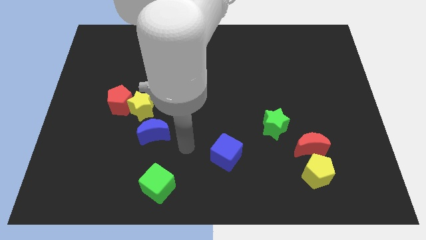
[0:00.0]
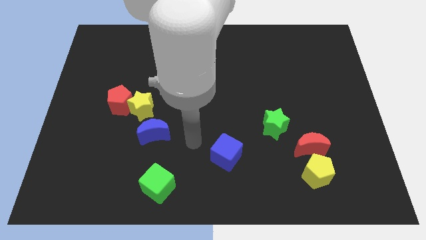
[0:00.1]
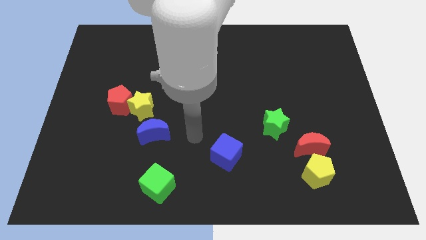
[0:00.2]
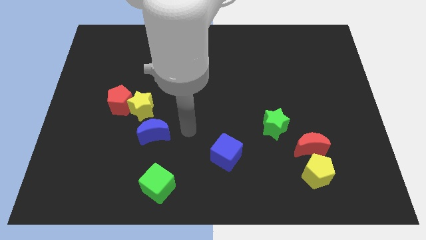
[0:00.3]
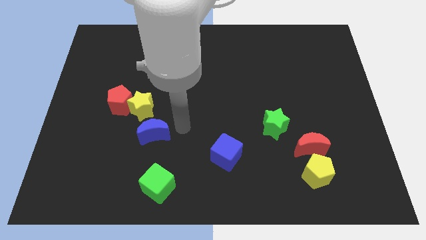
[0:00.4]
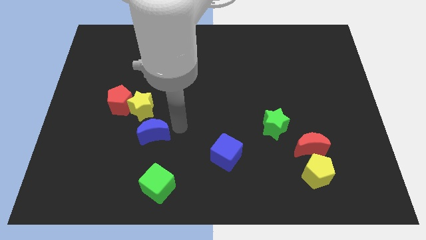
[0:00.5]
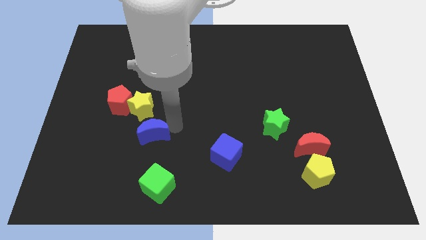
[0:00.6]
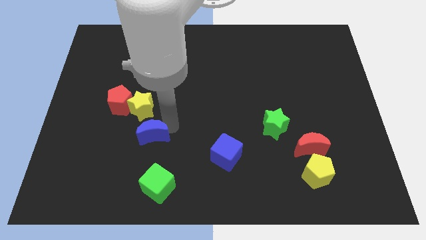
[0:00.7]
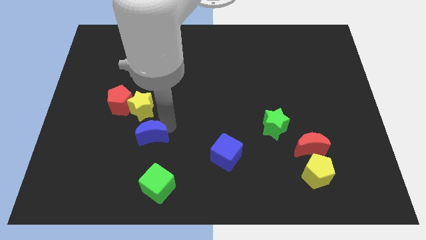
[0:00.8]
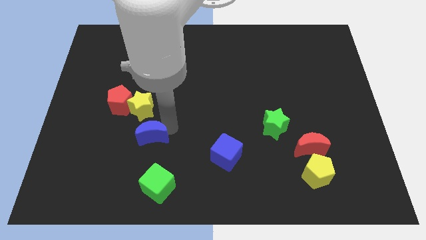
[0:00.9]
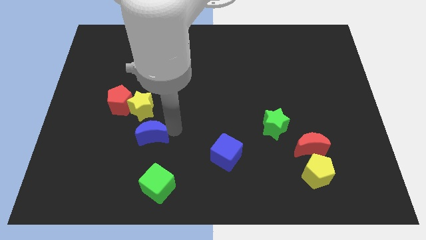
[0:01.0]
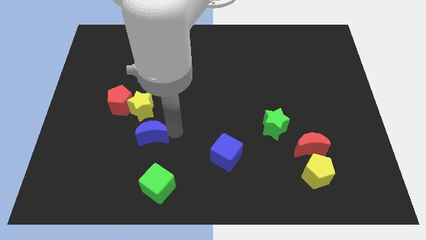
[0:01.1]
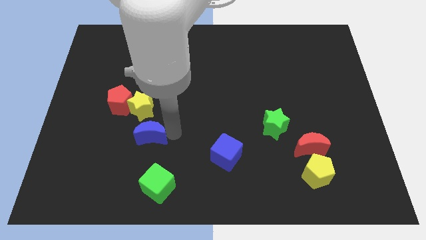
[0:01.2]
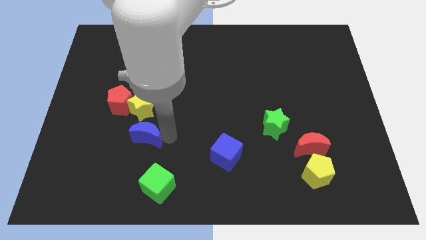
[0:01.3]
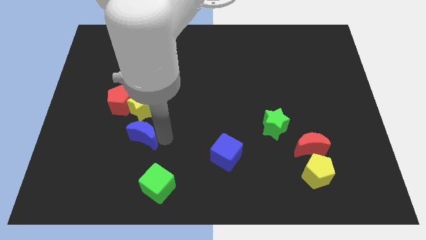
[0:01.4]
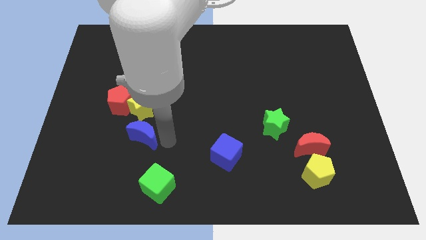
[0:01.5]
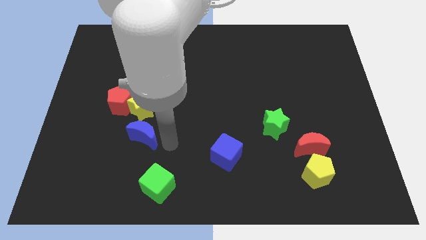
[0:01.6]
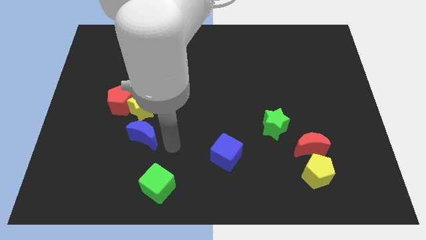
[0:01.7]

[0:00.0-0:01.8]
arrange the blue crescent at the bottom of the yellow star

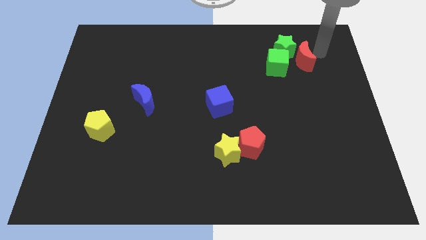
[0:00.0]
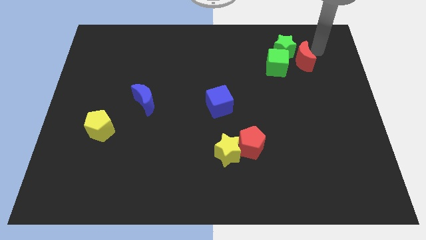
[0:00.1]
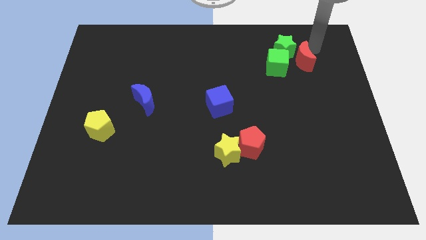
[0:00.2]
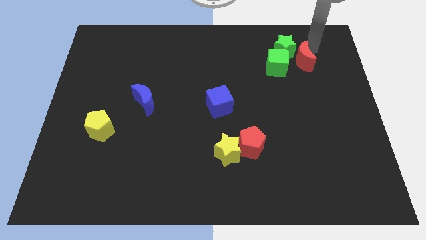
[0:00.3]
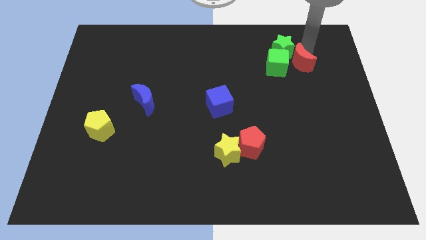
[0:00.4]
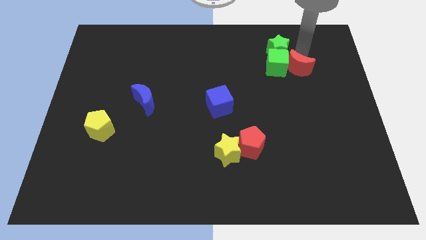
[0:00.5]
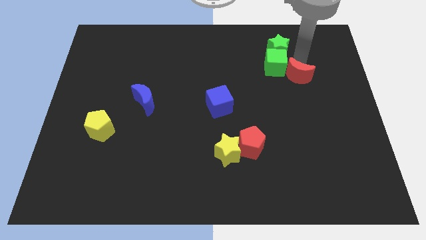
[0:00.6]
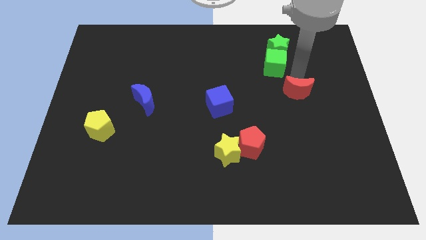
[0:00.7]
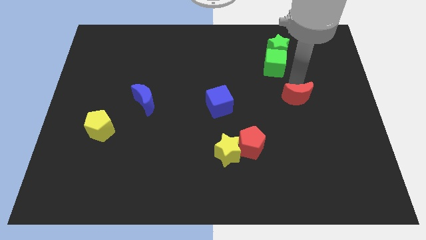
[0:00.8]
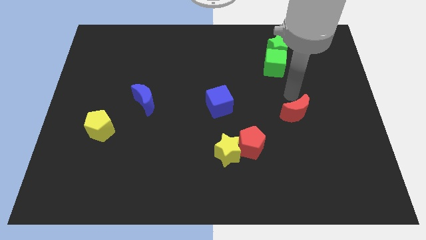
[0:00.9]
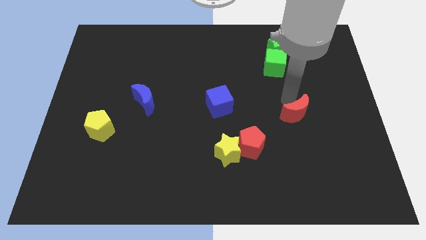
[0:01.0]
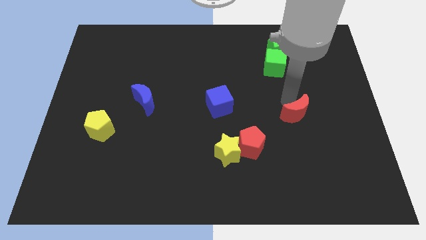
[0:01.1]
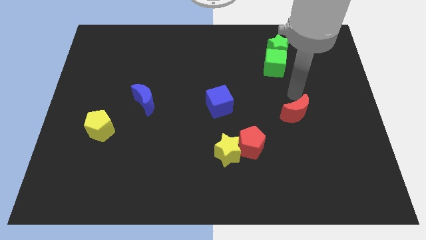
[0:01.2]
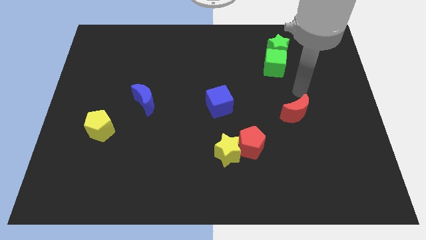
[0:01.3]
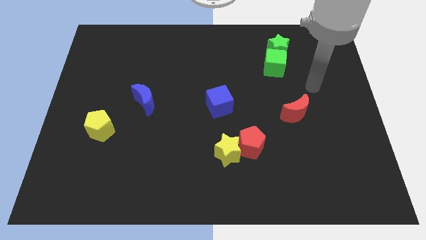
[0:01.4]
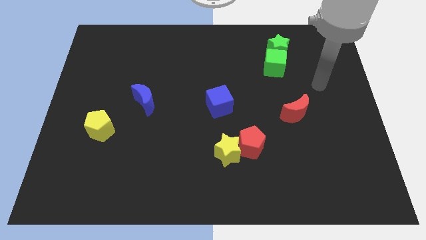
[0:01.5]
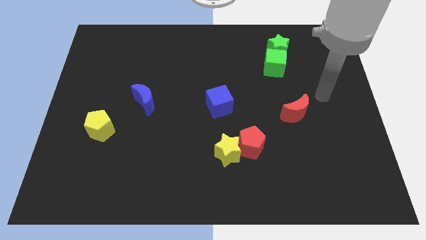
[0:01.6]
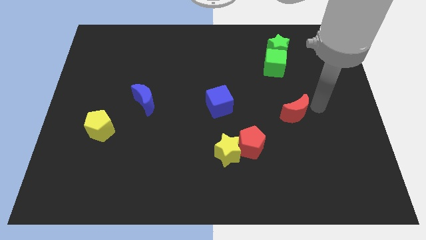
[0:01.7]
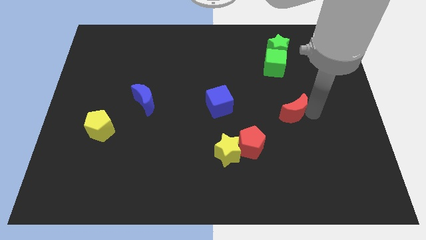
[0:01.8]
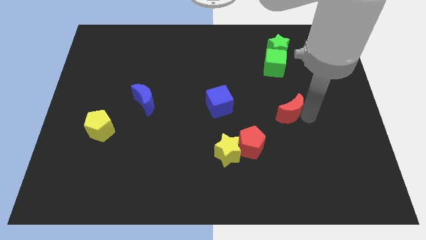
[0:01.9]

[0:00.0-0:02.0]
push the red crescent towards the bottom

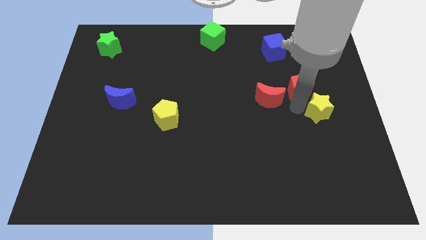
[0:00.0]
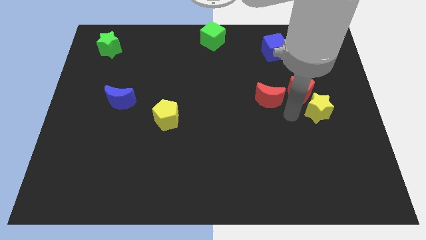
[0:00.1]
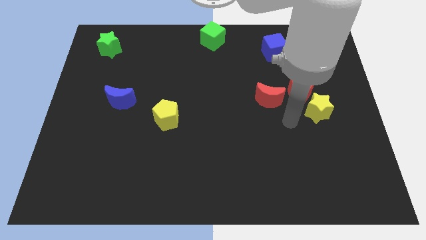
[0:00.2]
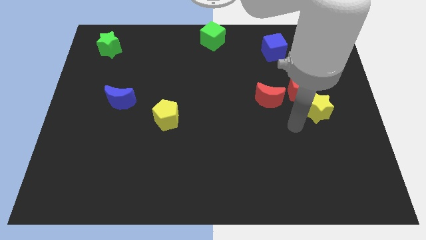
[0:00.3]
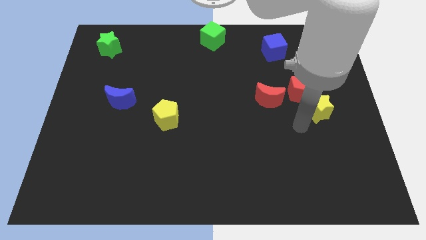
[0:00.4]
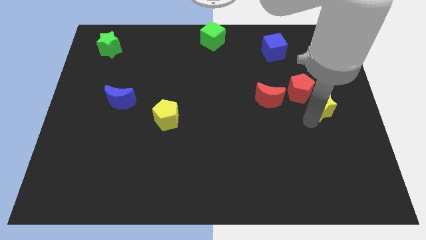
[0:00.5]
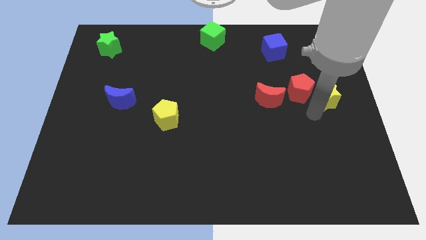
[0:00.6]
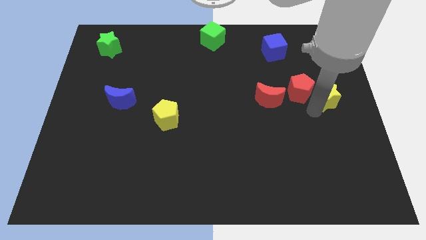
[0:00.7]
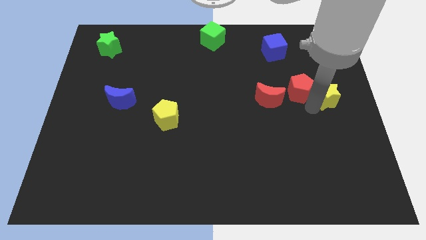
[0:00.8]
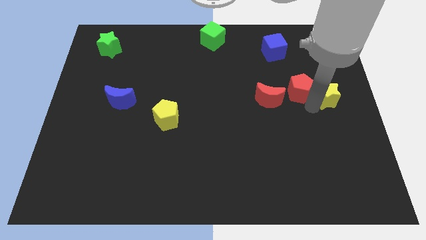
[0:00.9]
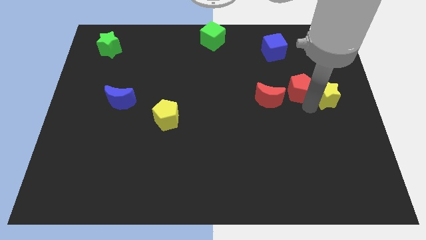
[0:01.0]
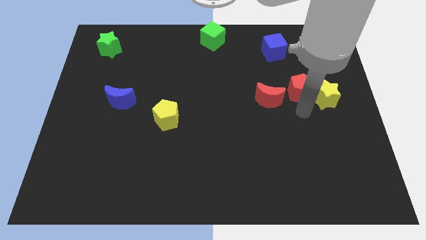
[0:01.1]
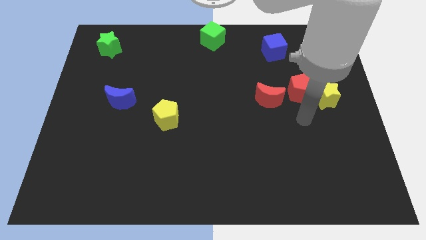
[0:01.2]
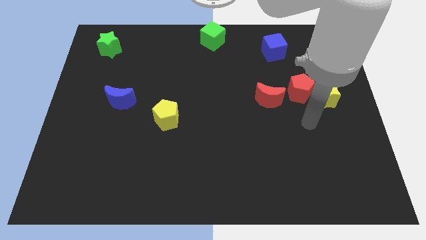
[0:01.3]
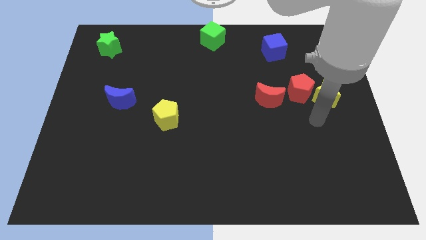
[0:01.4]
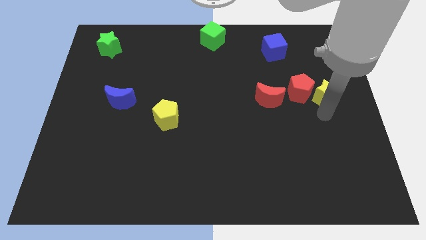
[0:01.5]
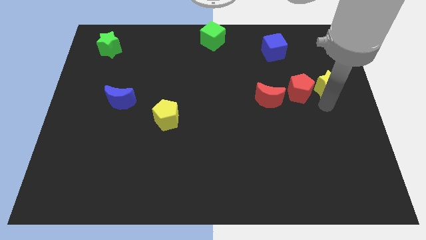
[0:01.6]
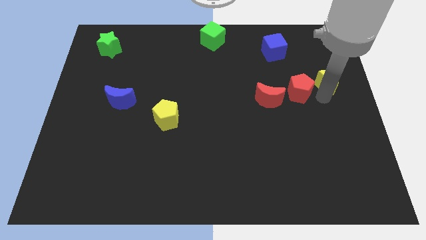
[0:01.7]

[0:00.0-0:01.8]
place yellow star to the right of red pentagon

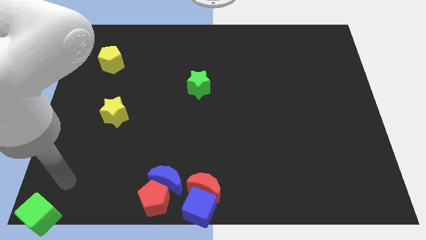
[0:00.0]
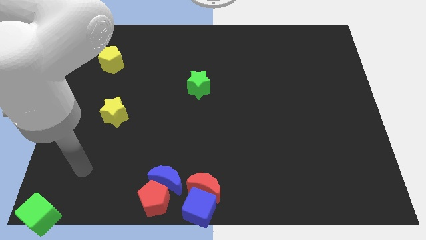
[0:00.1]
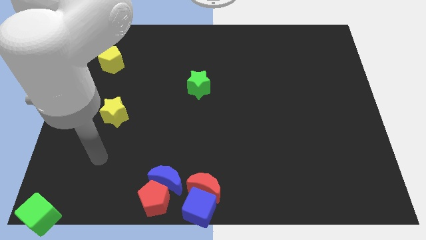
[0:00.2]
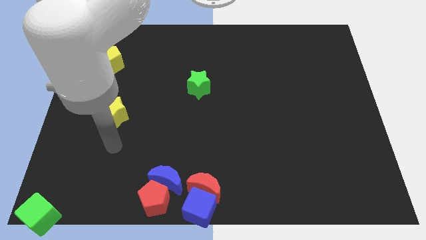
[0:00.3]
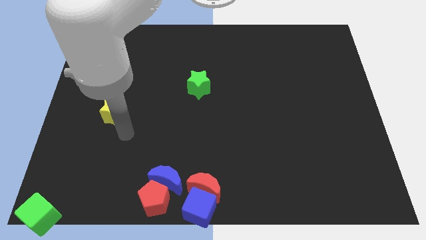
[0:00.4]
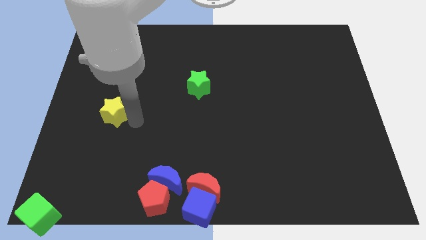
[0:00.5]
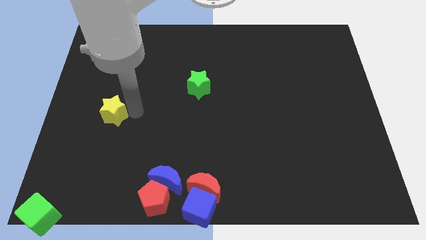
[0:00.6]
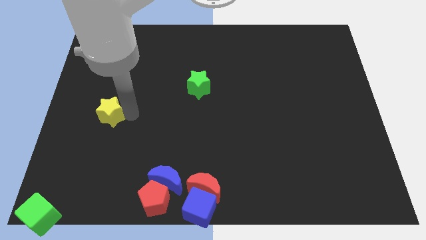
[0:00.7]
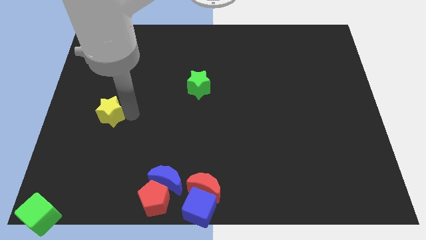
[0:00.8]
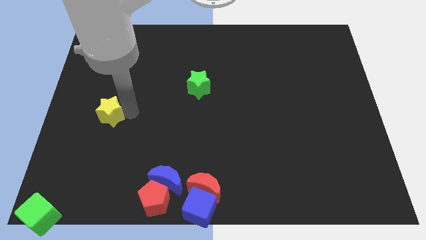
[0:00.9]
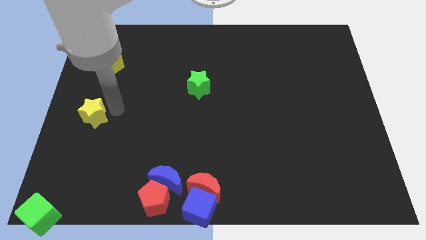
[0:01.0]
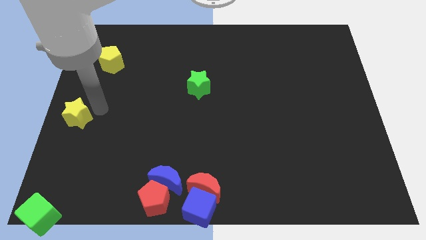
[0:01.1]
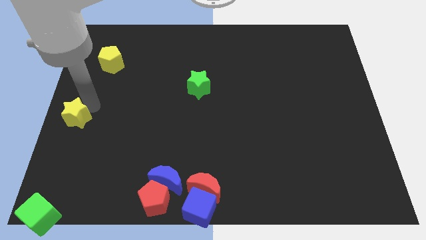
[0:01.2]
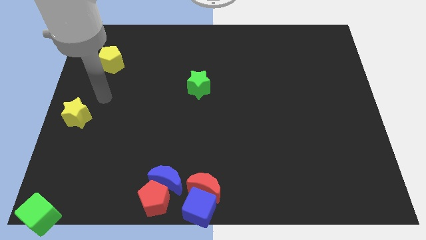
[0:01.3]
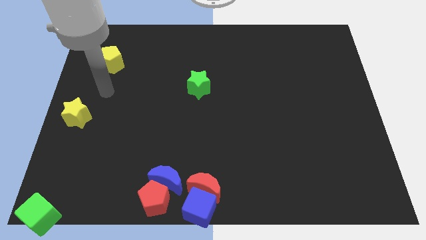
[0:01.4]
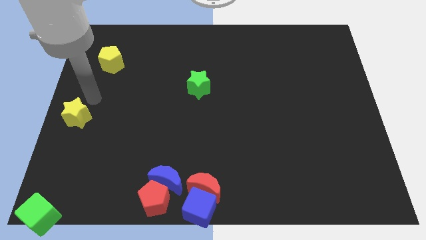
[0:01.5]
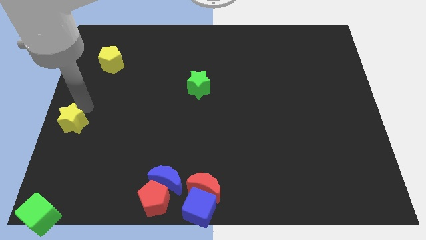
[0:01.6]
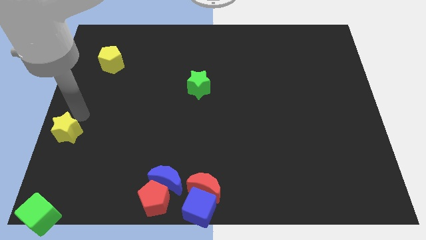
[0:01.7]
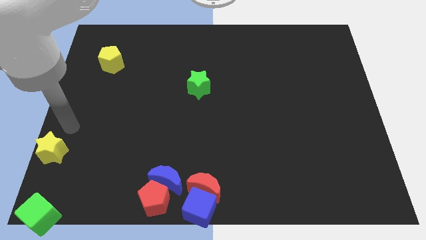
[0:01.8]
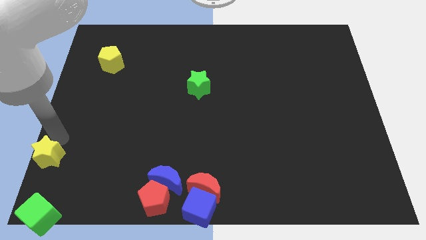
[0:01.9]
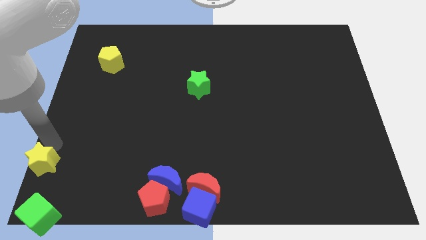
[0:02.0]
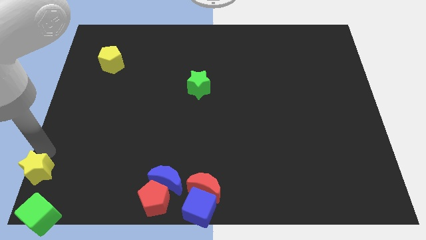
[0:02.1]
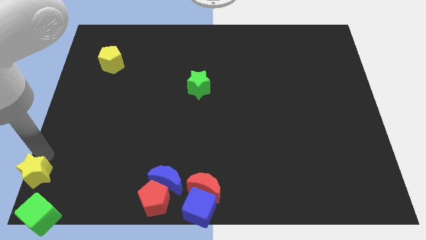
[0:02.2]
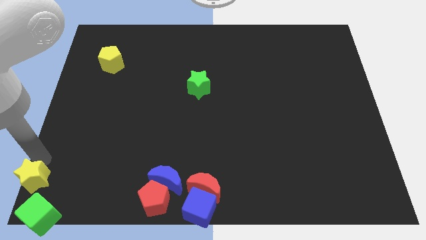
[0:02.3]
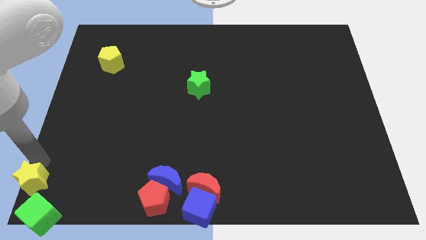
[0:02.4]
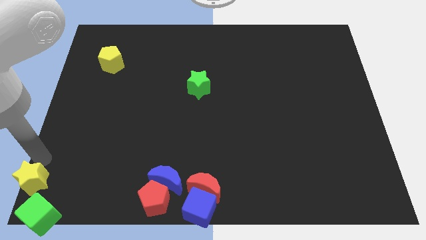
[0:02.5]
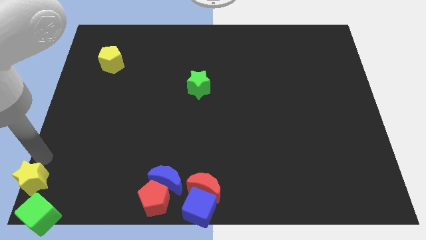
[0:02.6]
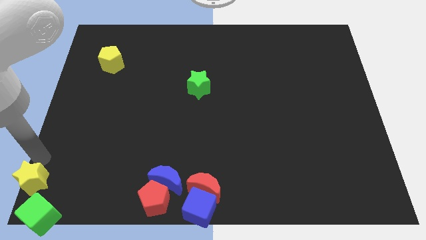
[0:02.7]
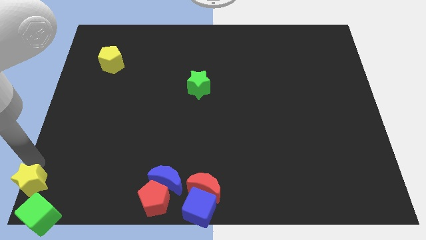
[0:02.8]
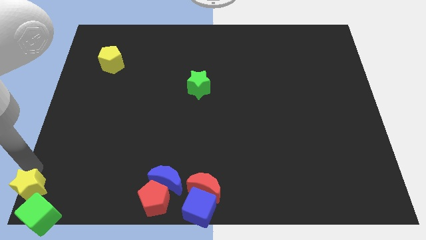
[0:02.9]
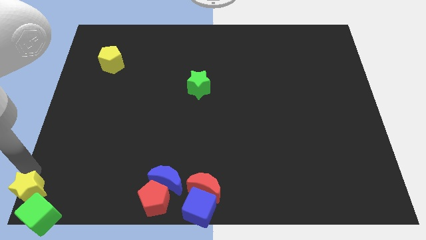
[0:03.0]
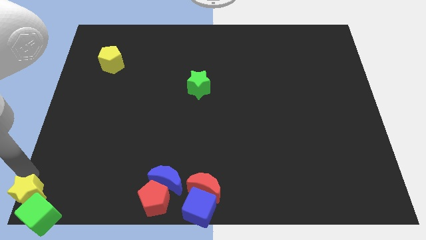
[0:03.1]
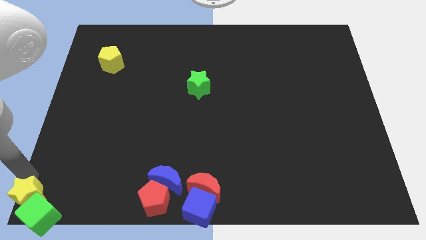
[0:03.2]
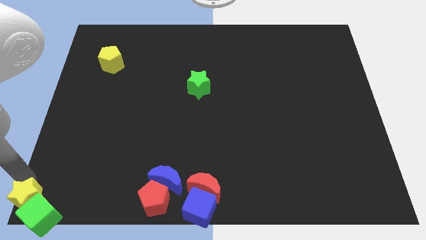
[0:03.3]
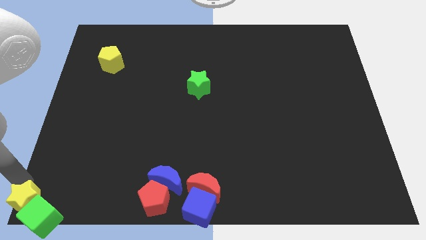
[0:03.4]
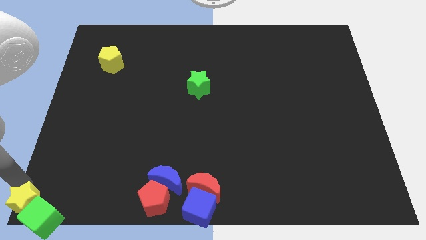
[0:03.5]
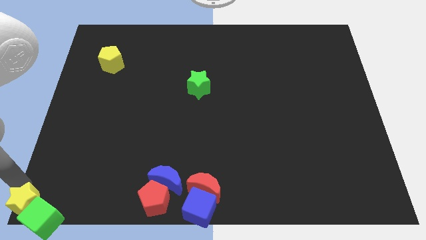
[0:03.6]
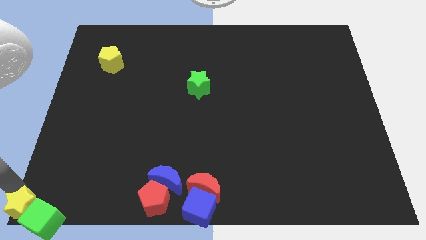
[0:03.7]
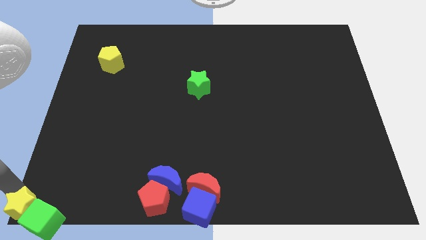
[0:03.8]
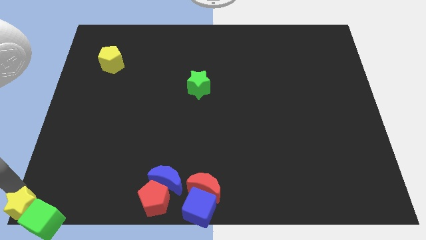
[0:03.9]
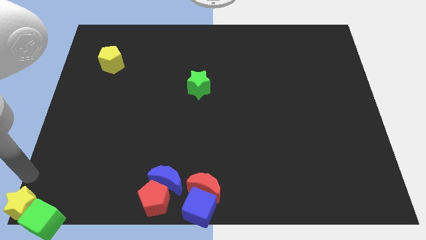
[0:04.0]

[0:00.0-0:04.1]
move the yellow star into the green cube
